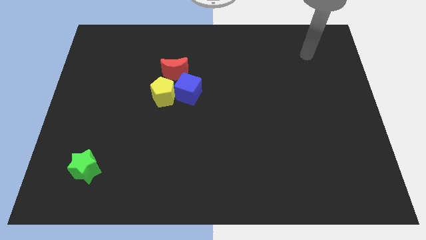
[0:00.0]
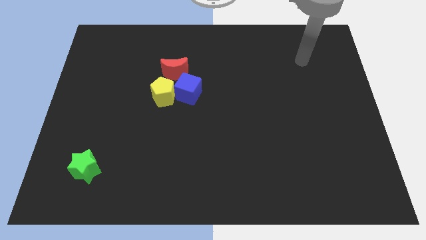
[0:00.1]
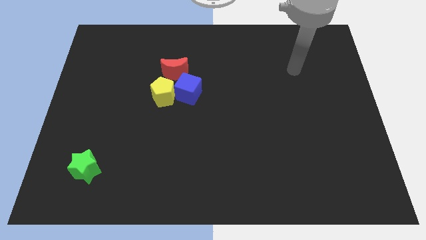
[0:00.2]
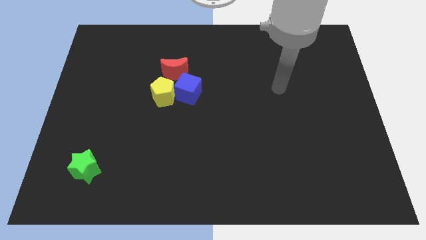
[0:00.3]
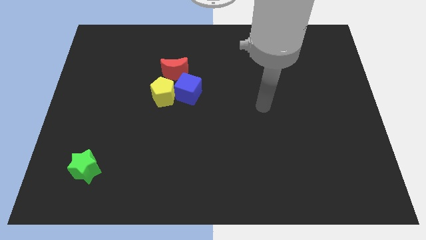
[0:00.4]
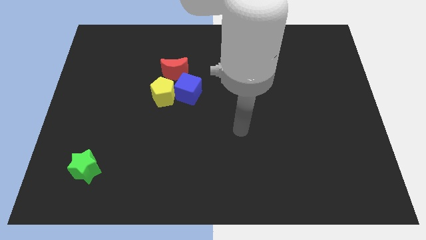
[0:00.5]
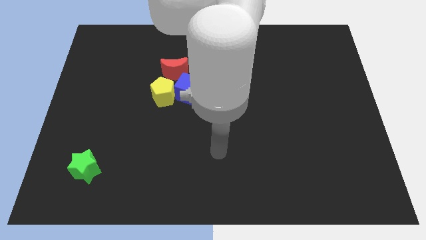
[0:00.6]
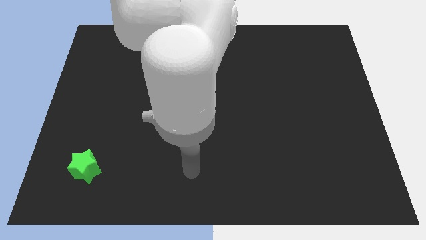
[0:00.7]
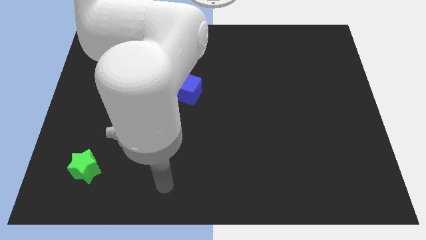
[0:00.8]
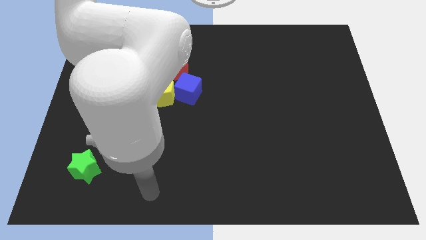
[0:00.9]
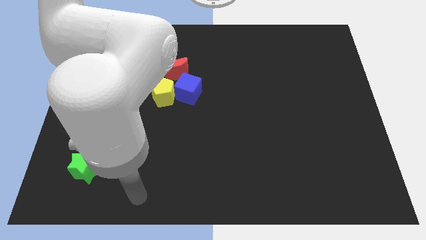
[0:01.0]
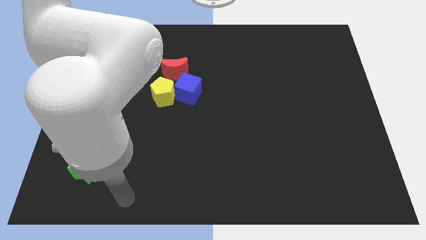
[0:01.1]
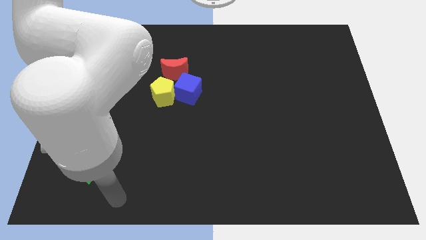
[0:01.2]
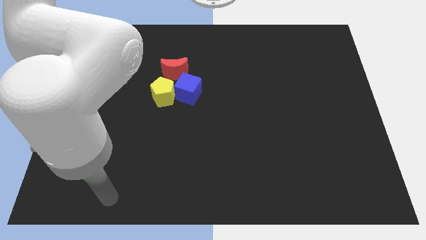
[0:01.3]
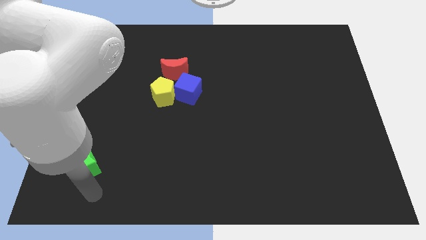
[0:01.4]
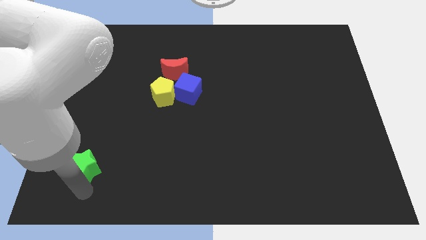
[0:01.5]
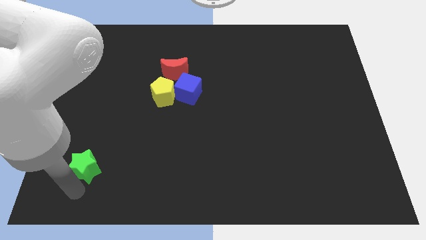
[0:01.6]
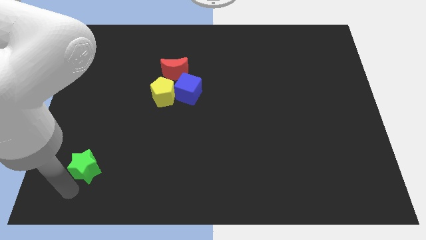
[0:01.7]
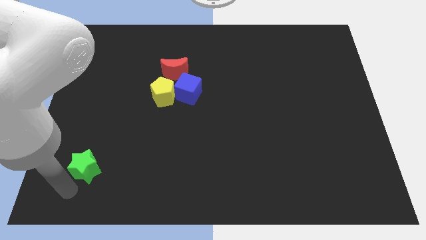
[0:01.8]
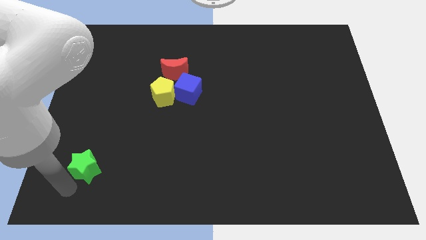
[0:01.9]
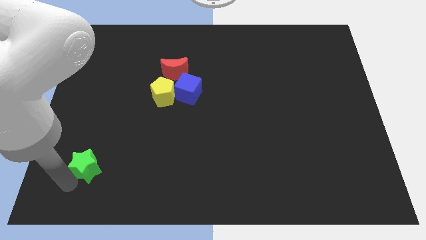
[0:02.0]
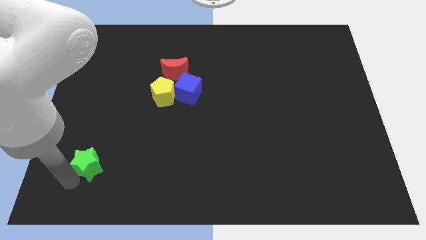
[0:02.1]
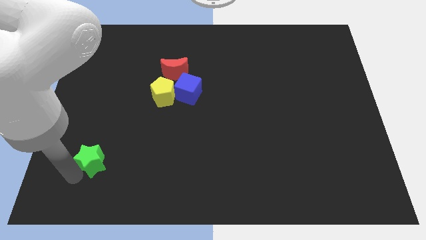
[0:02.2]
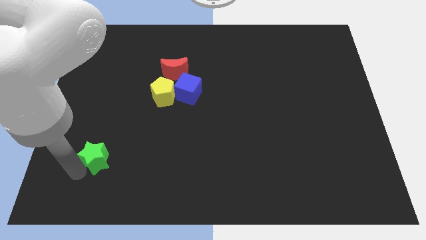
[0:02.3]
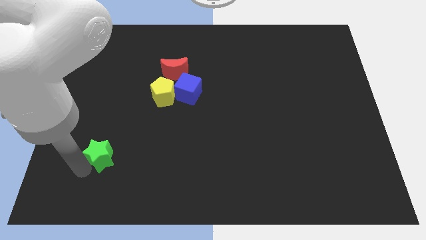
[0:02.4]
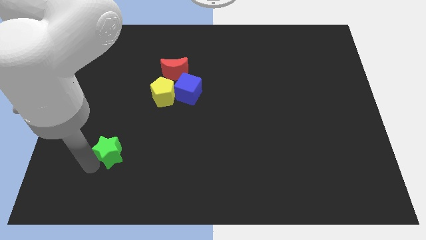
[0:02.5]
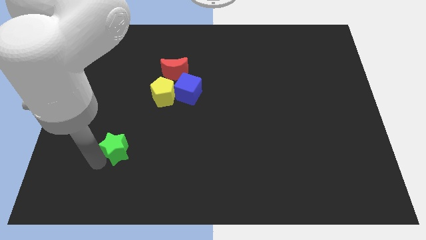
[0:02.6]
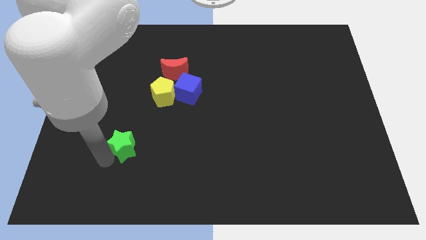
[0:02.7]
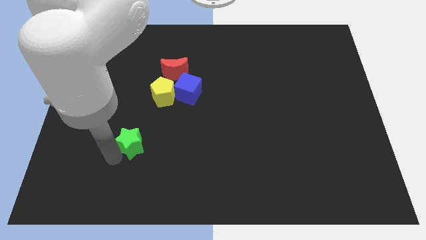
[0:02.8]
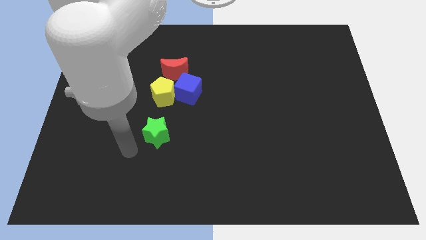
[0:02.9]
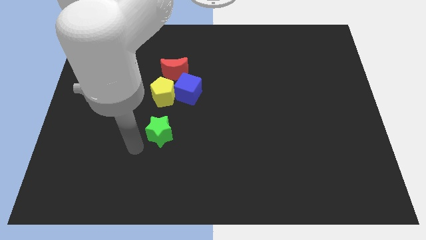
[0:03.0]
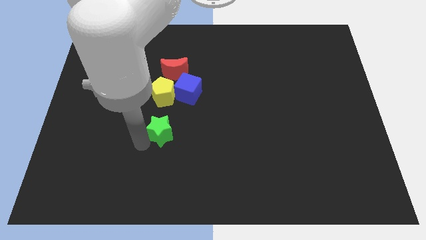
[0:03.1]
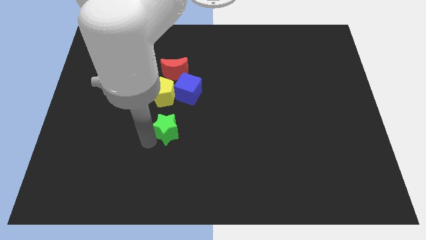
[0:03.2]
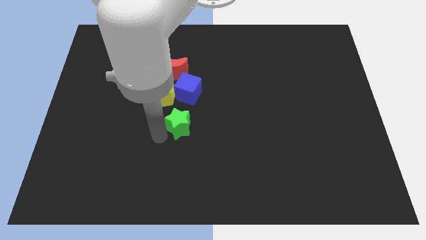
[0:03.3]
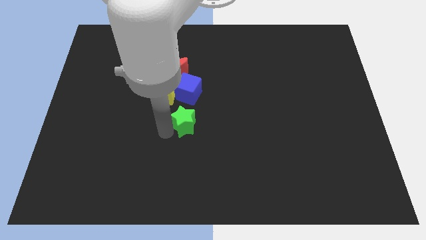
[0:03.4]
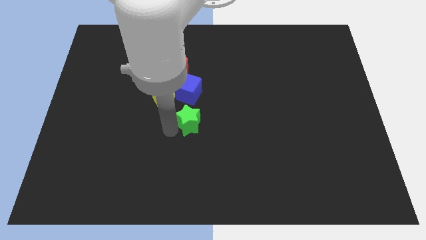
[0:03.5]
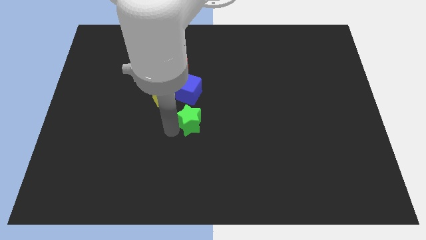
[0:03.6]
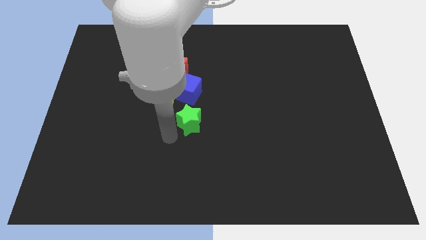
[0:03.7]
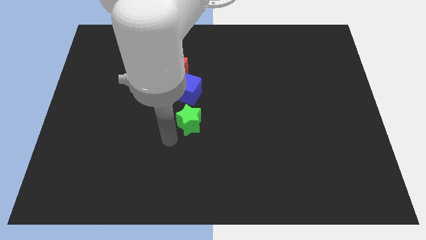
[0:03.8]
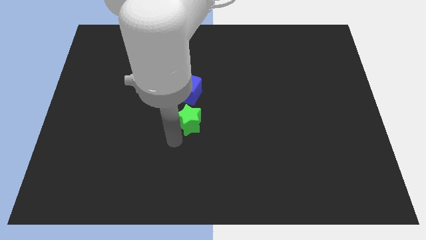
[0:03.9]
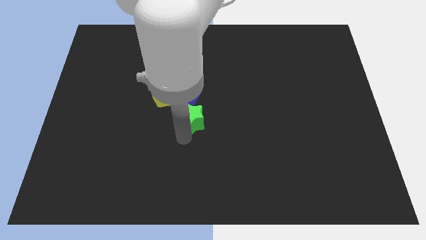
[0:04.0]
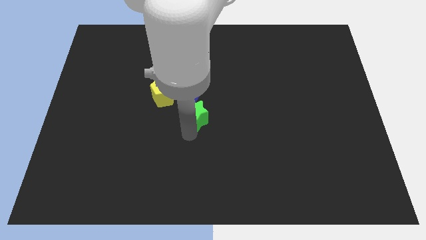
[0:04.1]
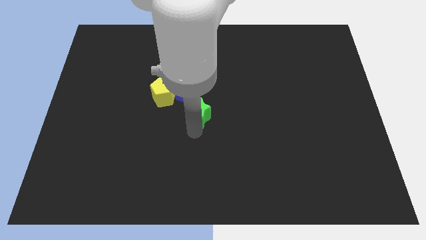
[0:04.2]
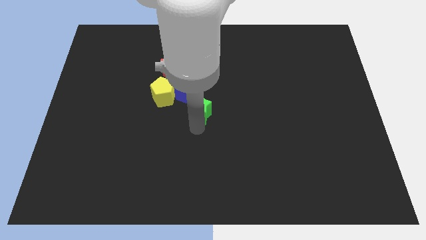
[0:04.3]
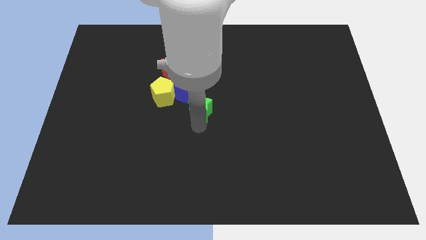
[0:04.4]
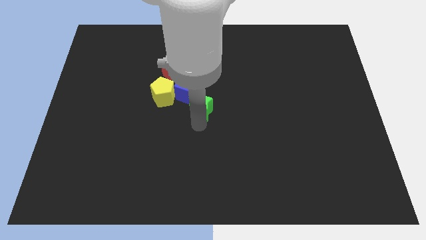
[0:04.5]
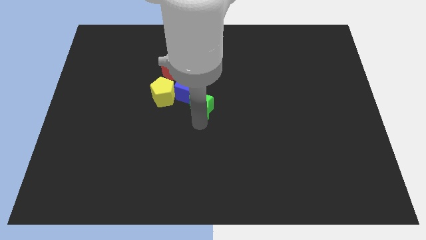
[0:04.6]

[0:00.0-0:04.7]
slide the star close to the blue block

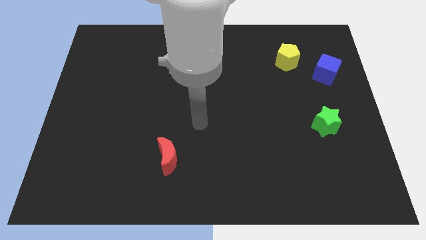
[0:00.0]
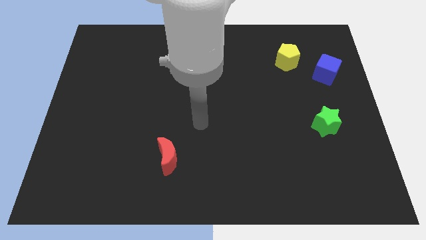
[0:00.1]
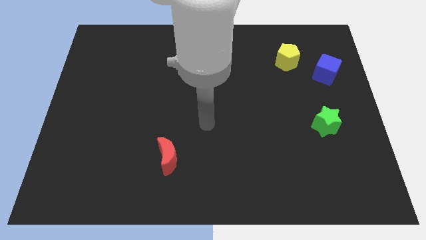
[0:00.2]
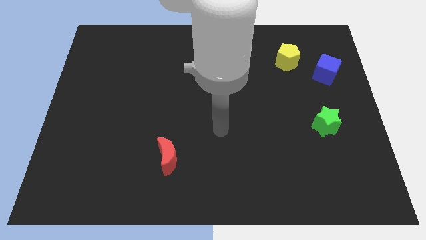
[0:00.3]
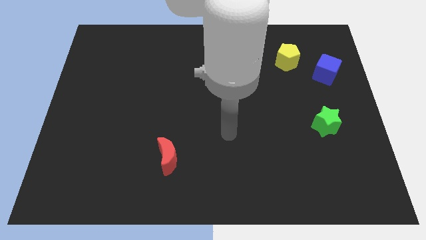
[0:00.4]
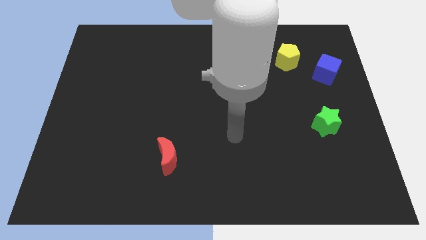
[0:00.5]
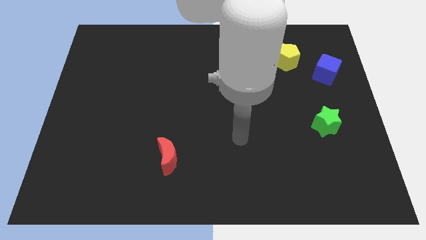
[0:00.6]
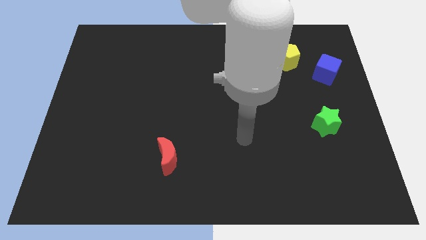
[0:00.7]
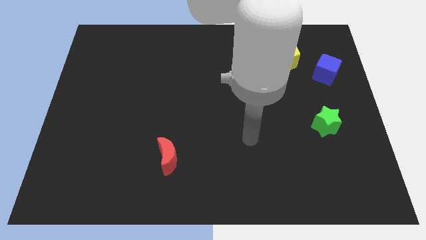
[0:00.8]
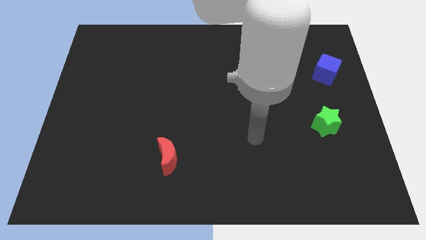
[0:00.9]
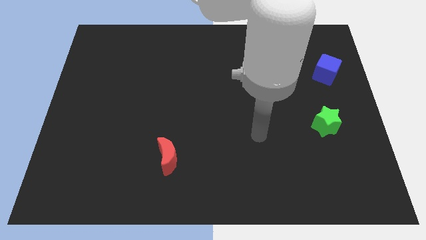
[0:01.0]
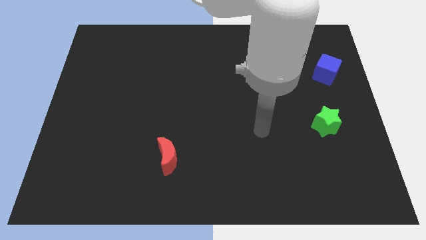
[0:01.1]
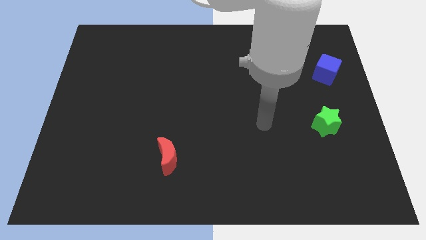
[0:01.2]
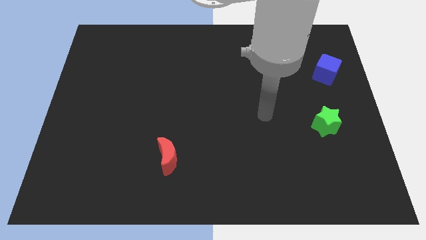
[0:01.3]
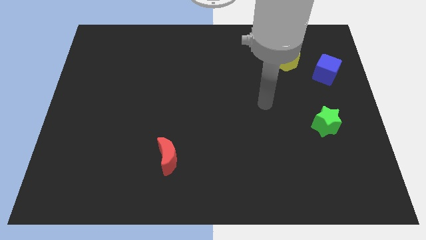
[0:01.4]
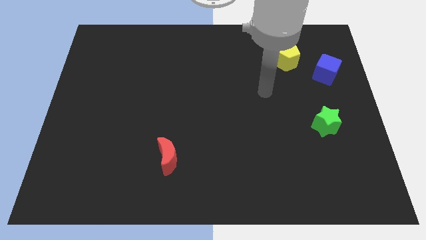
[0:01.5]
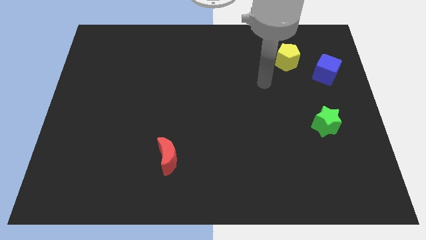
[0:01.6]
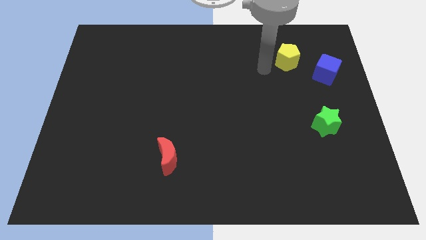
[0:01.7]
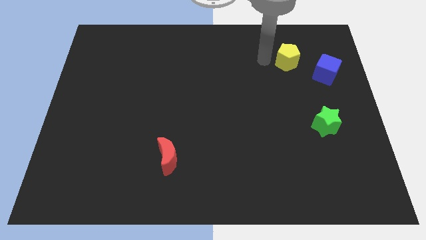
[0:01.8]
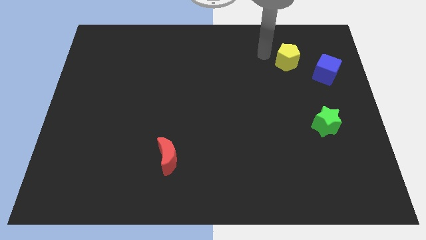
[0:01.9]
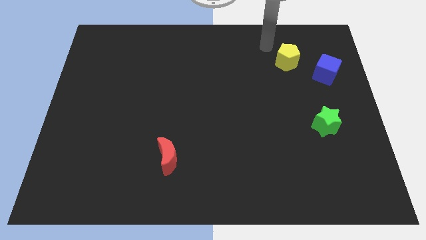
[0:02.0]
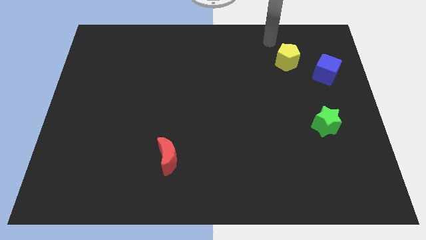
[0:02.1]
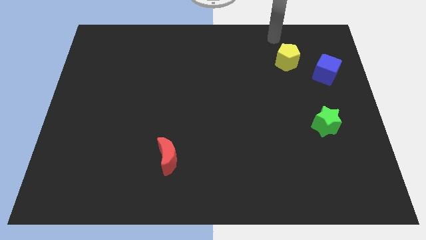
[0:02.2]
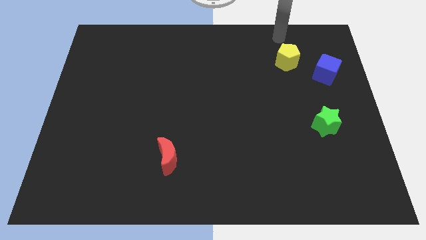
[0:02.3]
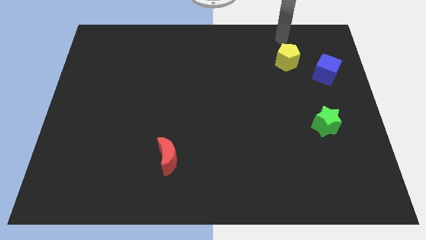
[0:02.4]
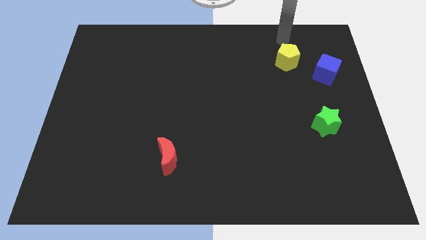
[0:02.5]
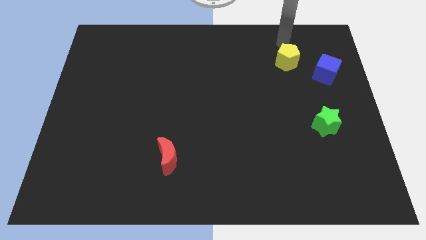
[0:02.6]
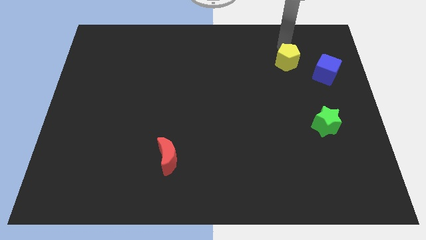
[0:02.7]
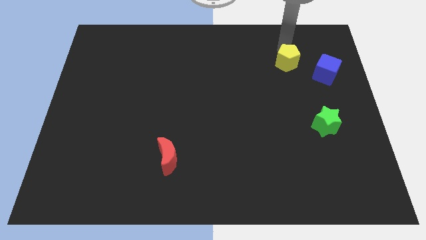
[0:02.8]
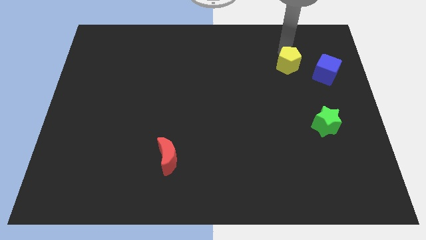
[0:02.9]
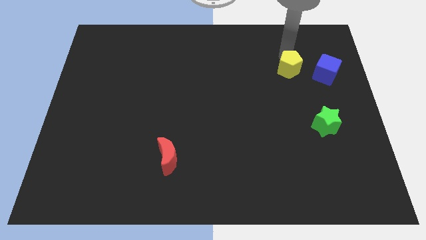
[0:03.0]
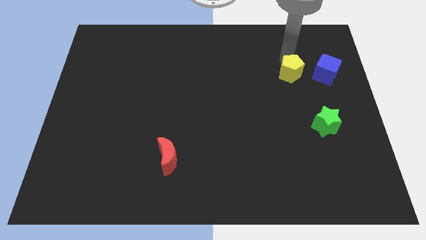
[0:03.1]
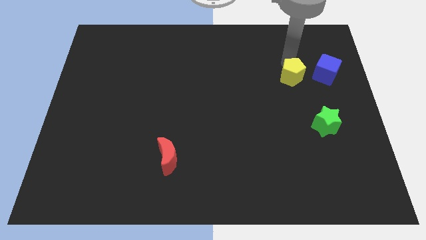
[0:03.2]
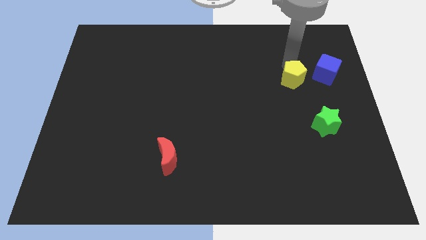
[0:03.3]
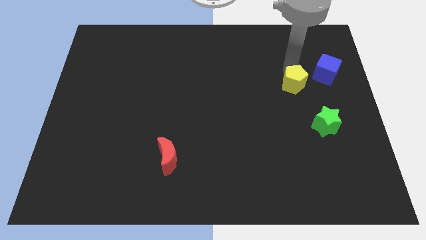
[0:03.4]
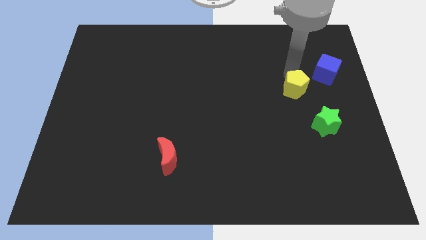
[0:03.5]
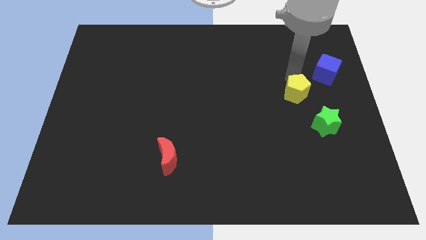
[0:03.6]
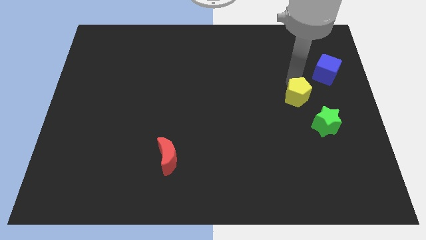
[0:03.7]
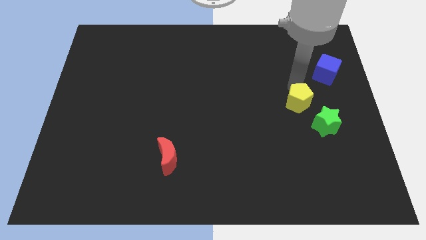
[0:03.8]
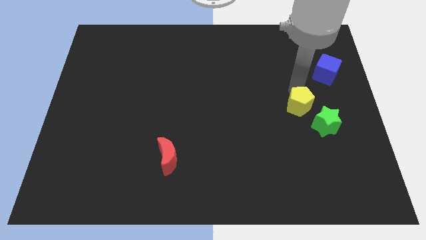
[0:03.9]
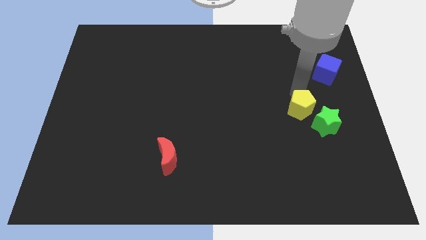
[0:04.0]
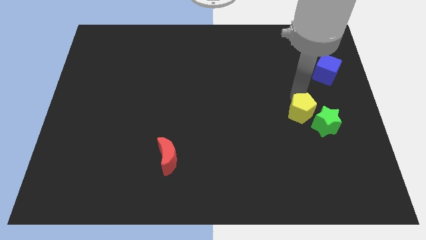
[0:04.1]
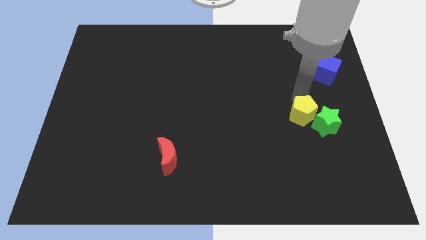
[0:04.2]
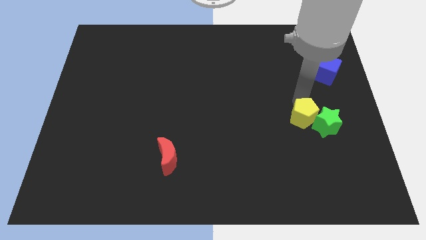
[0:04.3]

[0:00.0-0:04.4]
slide the pentagon close to the green star
